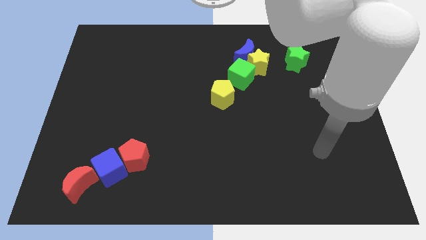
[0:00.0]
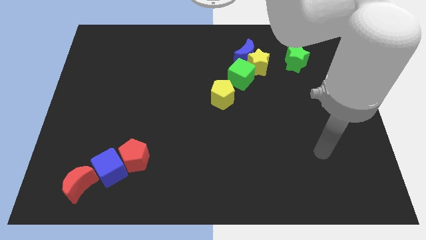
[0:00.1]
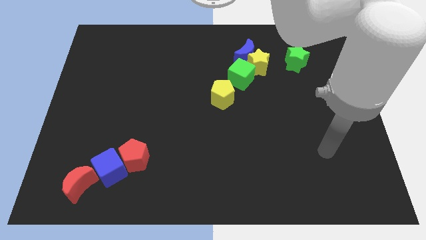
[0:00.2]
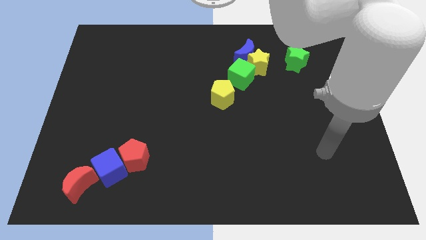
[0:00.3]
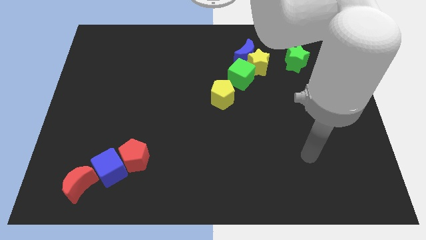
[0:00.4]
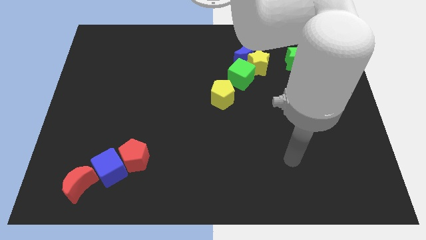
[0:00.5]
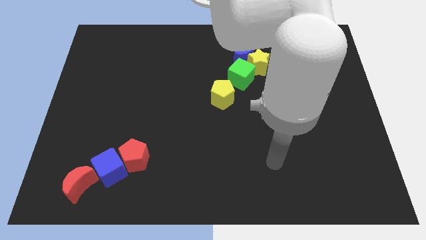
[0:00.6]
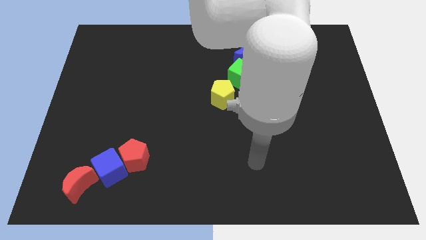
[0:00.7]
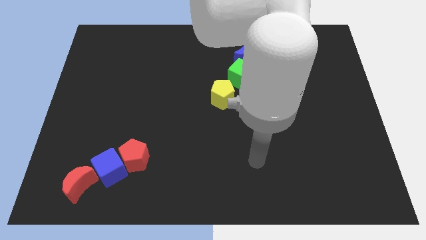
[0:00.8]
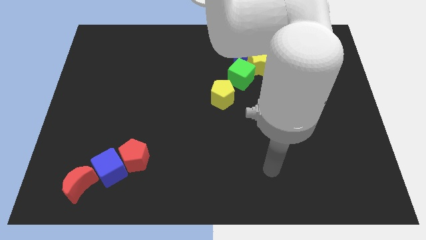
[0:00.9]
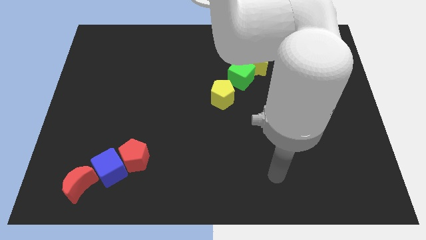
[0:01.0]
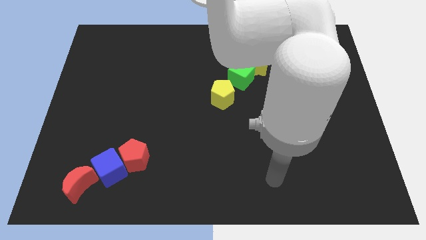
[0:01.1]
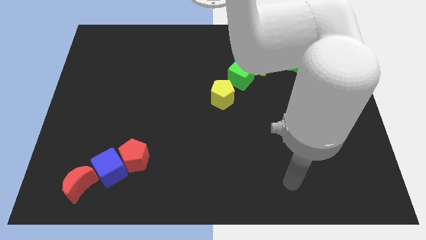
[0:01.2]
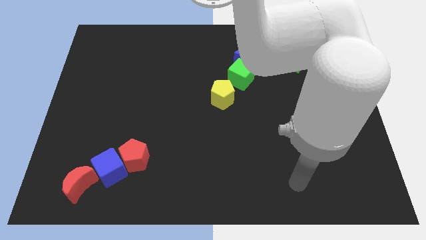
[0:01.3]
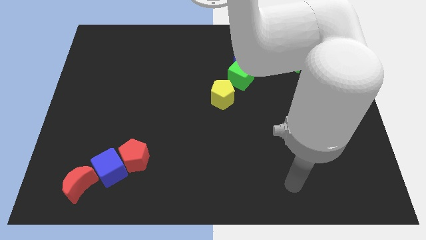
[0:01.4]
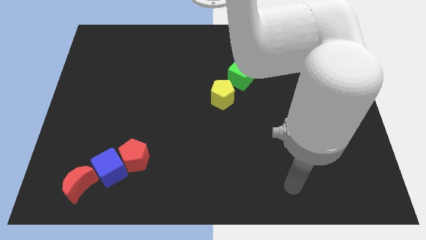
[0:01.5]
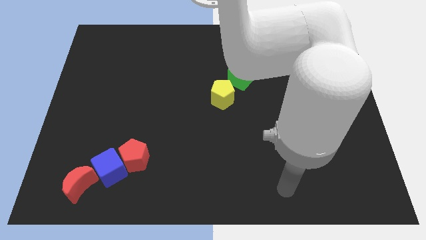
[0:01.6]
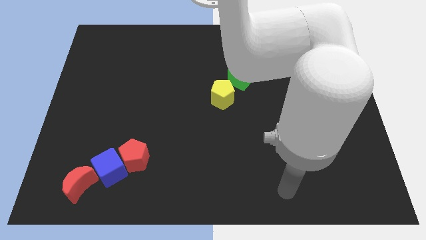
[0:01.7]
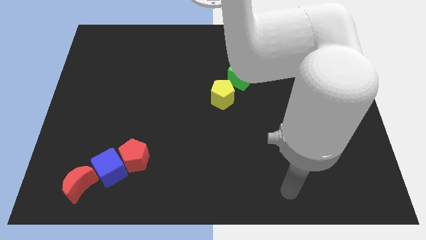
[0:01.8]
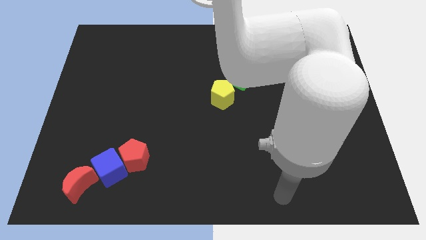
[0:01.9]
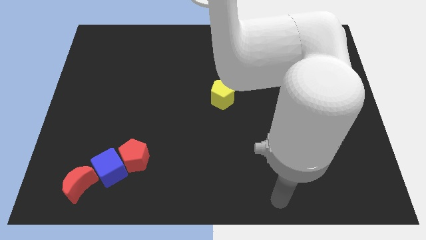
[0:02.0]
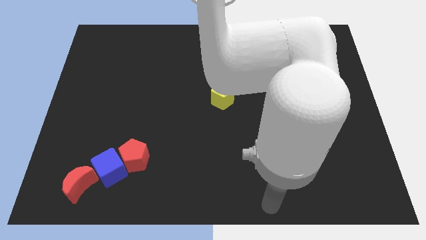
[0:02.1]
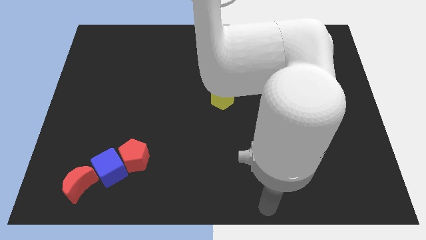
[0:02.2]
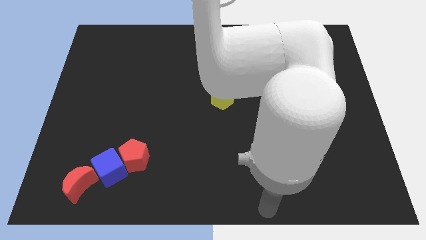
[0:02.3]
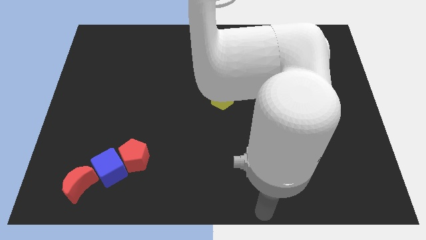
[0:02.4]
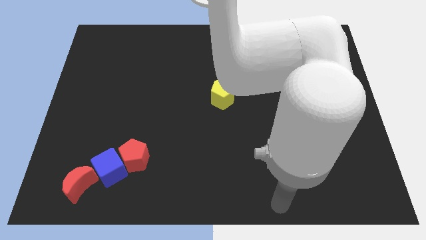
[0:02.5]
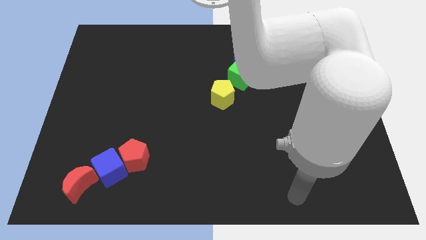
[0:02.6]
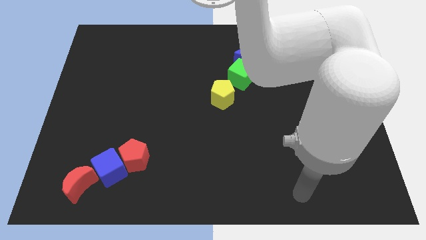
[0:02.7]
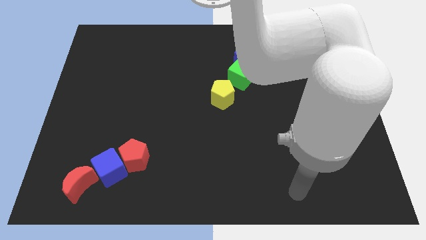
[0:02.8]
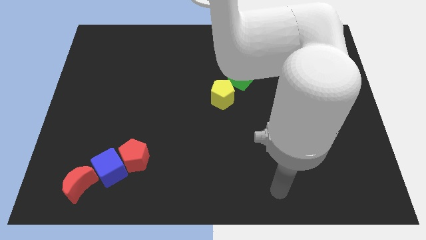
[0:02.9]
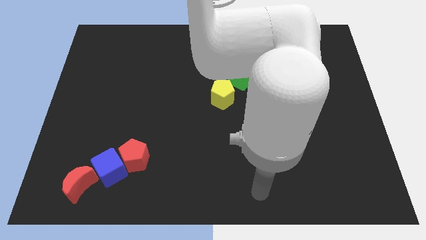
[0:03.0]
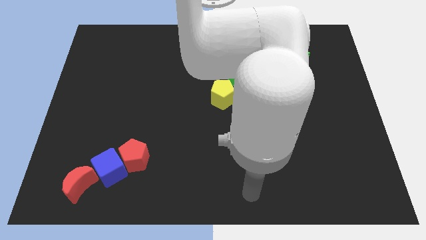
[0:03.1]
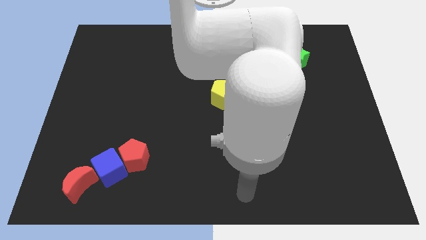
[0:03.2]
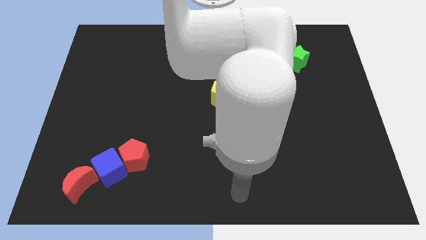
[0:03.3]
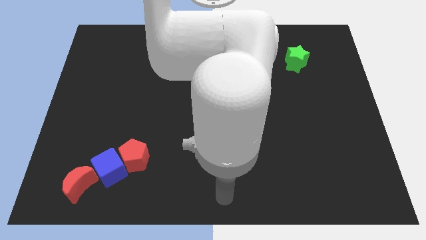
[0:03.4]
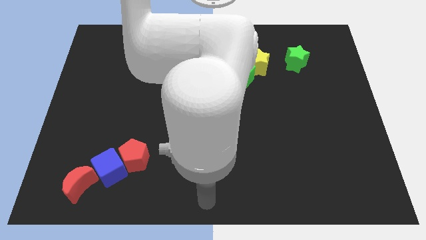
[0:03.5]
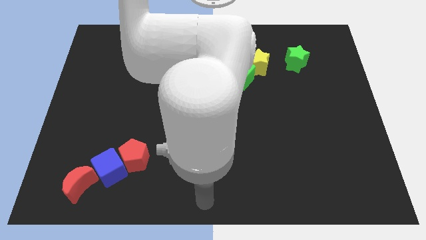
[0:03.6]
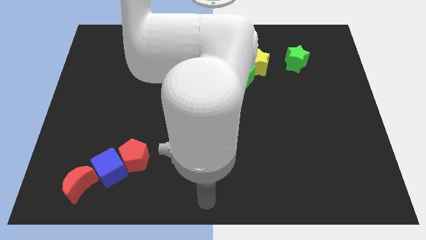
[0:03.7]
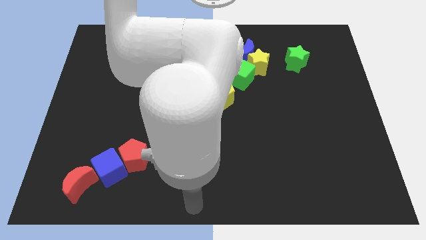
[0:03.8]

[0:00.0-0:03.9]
move your arm to the bottom center

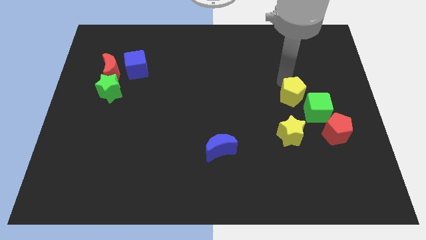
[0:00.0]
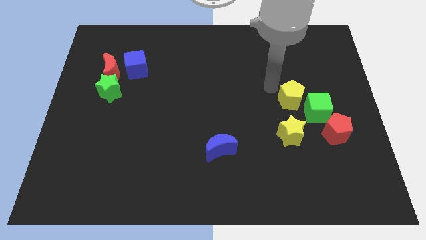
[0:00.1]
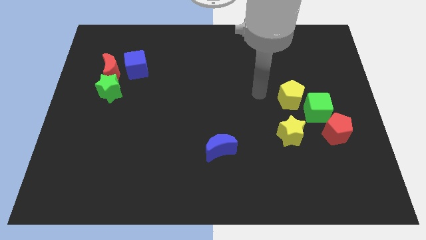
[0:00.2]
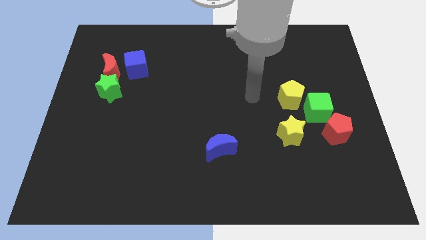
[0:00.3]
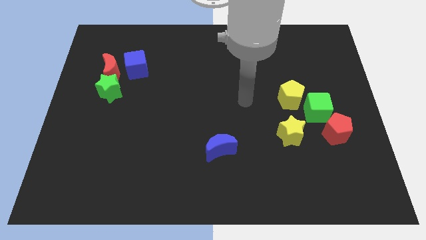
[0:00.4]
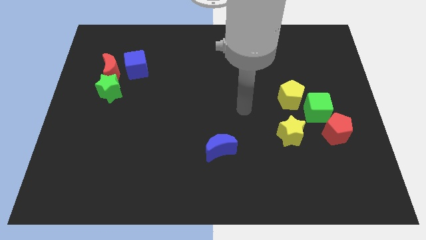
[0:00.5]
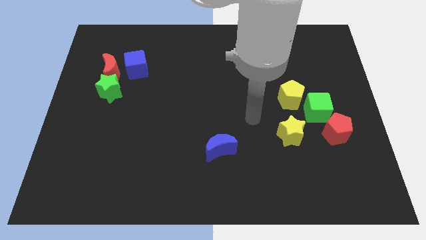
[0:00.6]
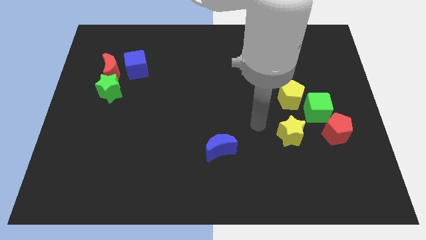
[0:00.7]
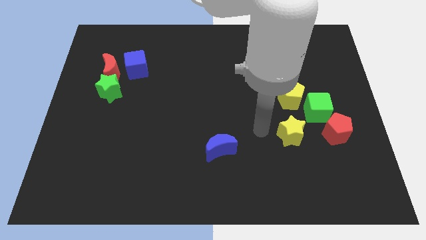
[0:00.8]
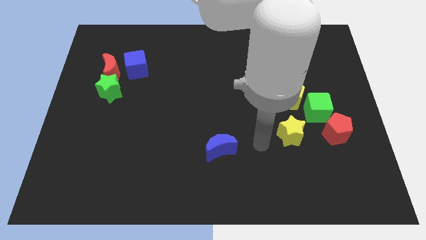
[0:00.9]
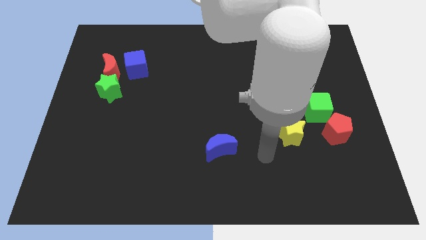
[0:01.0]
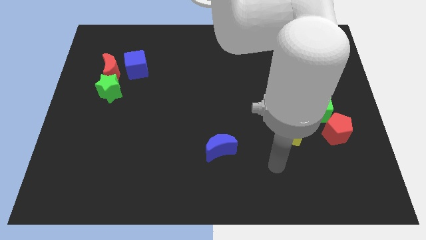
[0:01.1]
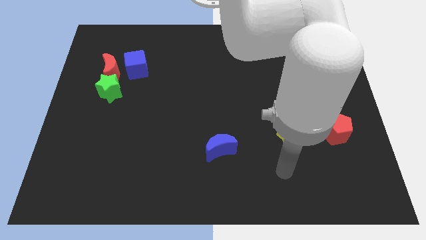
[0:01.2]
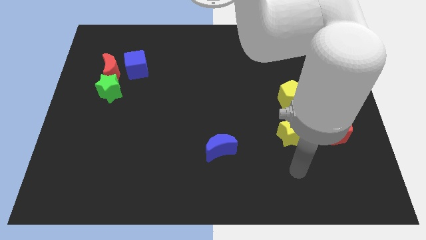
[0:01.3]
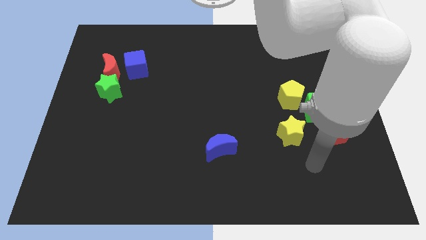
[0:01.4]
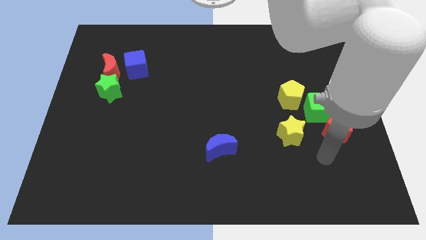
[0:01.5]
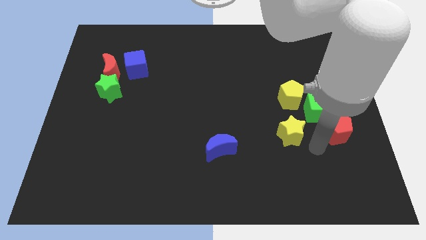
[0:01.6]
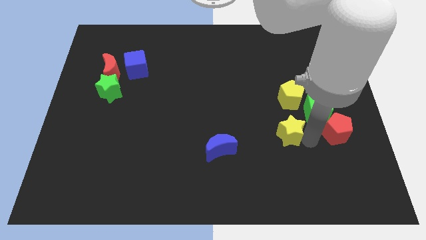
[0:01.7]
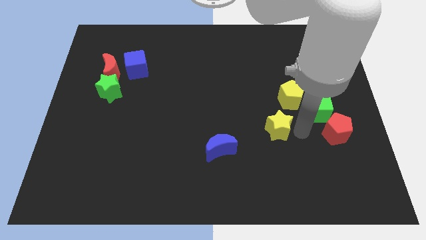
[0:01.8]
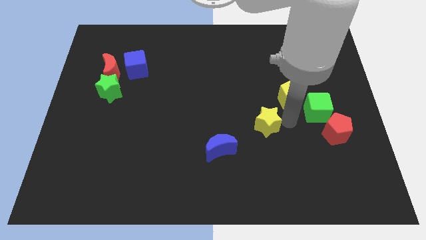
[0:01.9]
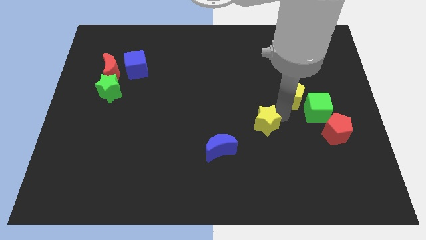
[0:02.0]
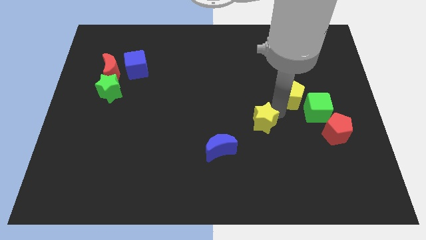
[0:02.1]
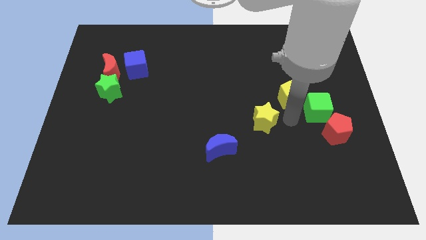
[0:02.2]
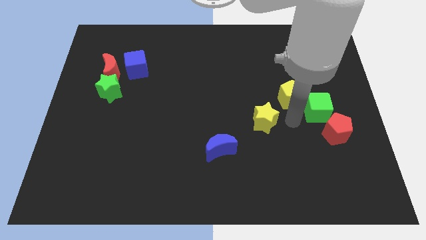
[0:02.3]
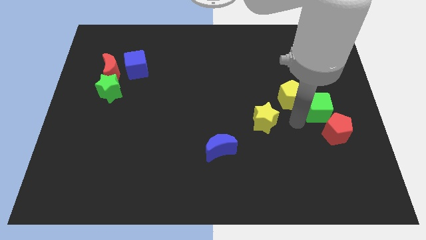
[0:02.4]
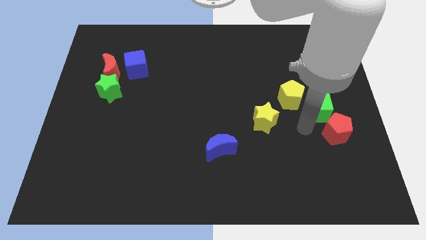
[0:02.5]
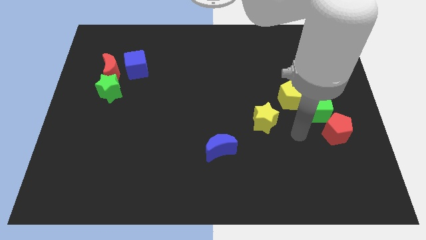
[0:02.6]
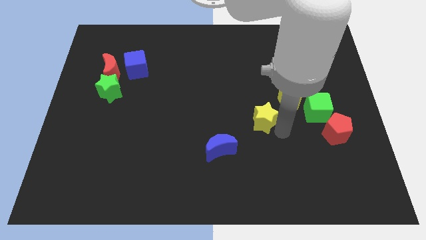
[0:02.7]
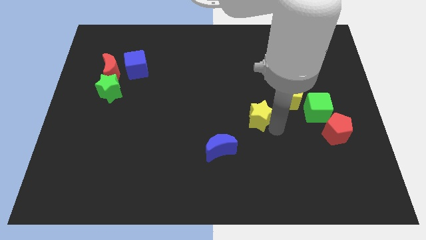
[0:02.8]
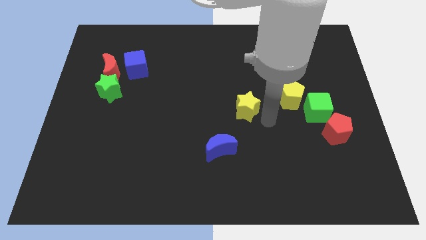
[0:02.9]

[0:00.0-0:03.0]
place yellow star in between yellow pentagon and blue moon

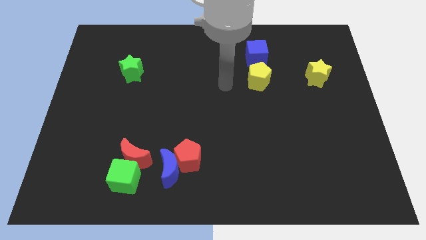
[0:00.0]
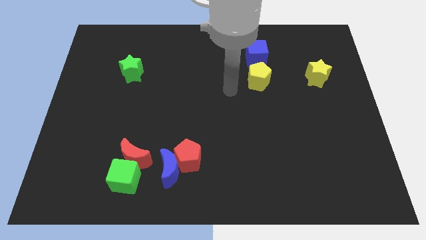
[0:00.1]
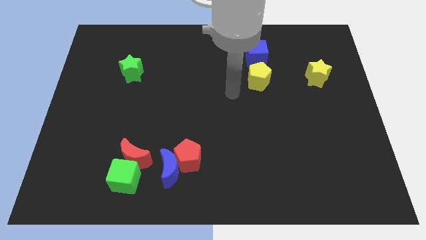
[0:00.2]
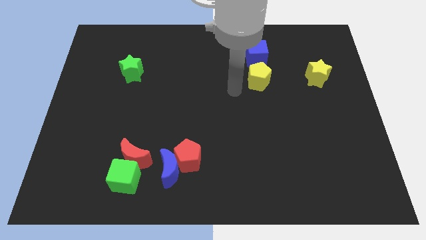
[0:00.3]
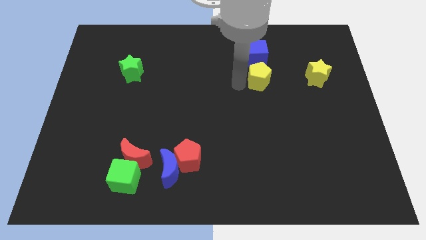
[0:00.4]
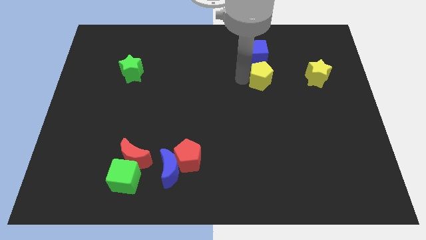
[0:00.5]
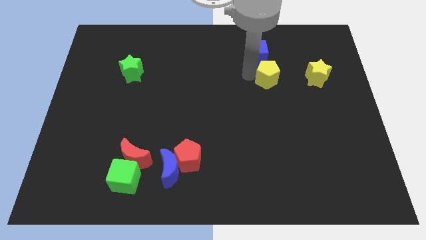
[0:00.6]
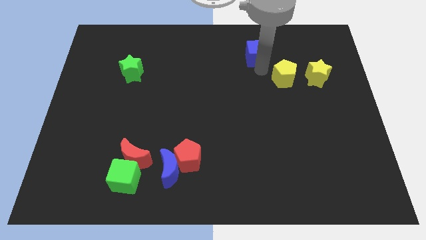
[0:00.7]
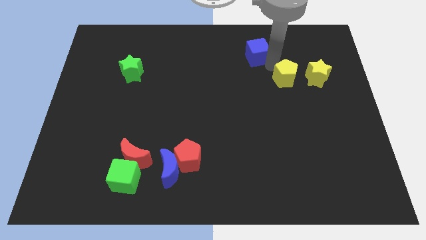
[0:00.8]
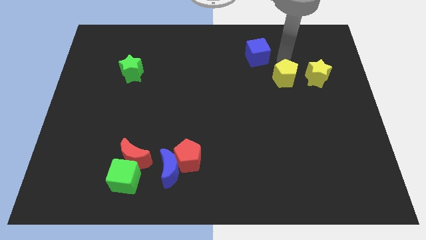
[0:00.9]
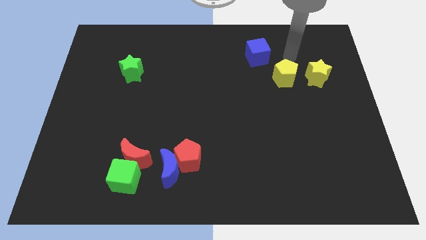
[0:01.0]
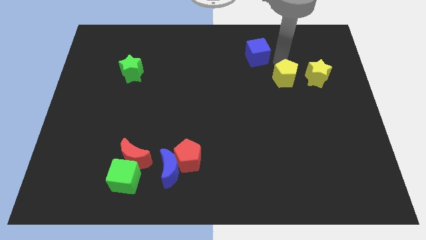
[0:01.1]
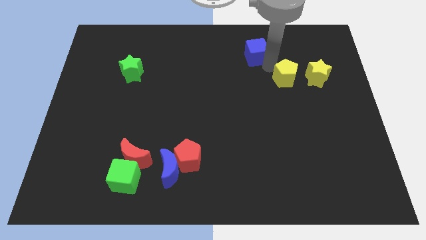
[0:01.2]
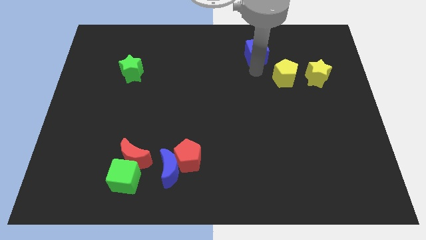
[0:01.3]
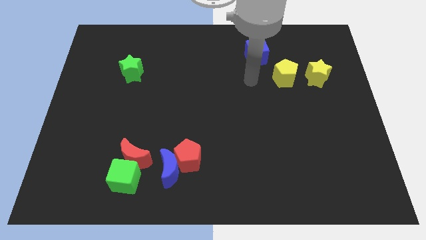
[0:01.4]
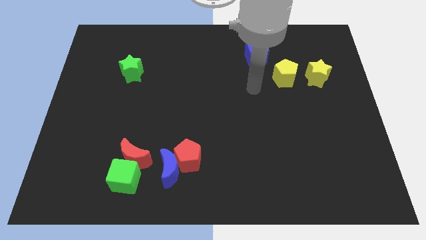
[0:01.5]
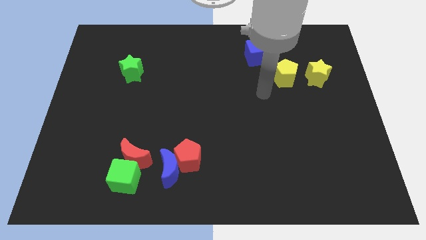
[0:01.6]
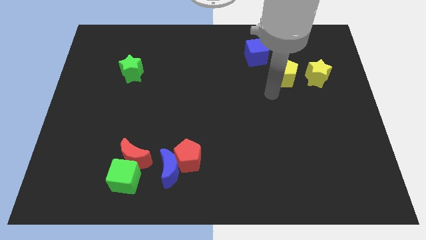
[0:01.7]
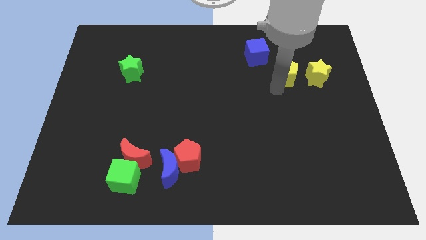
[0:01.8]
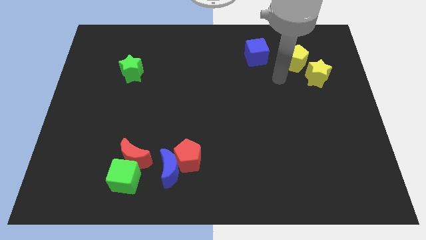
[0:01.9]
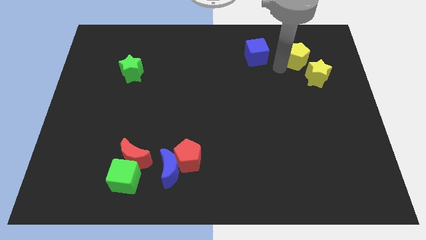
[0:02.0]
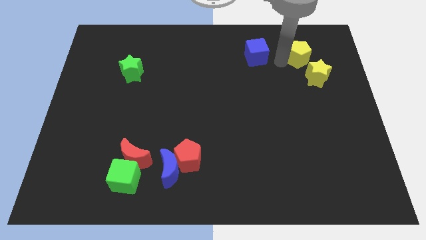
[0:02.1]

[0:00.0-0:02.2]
move the yellow pentagon to the top right of the board
